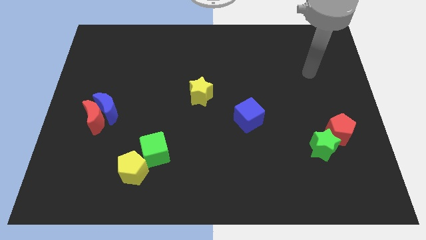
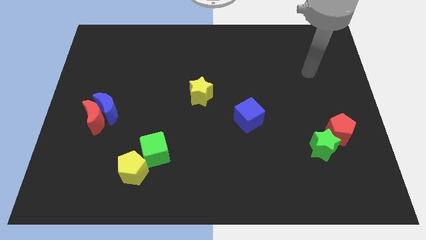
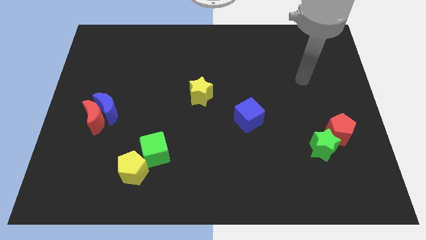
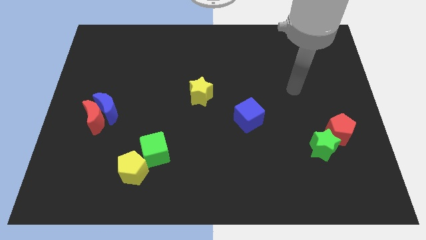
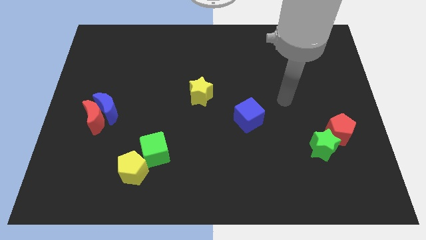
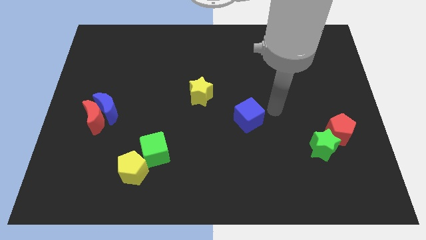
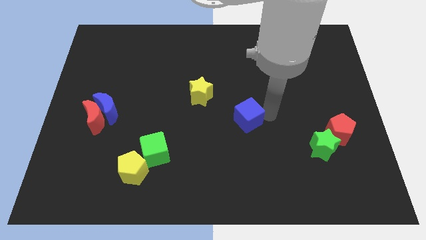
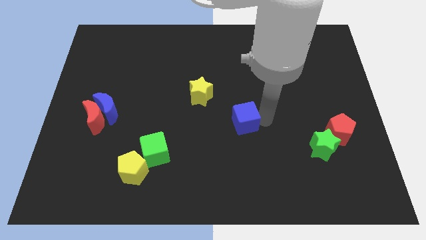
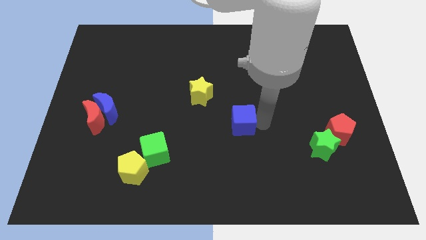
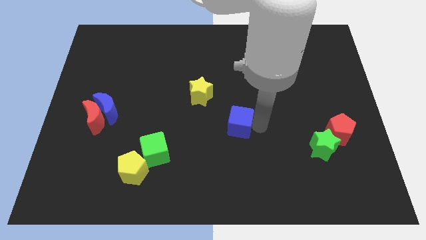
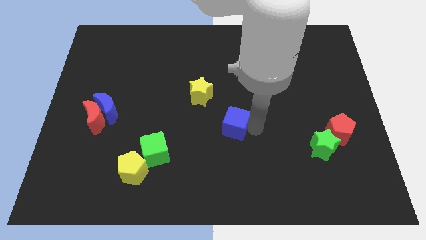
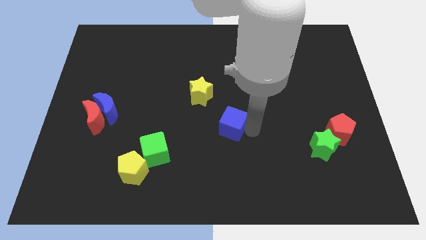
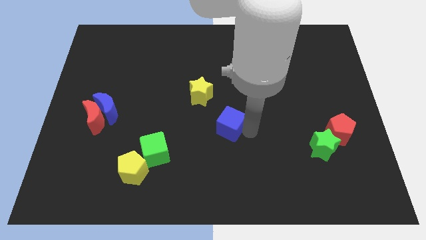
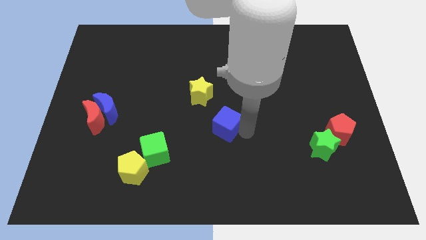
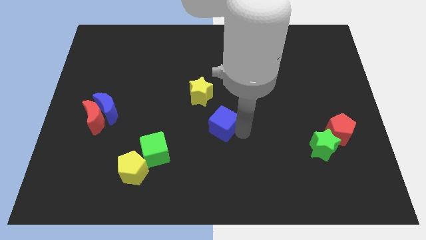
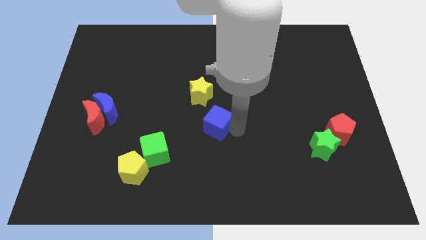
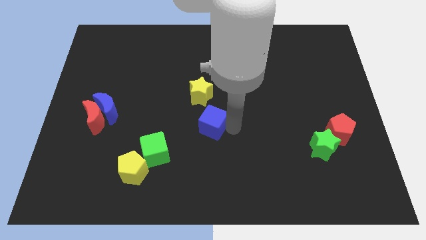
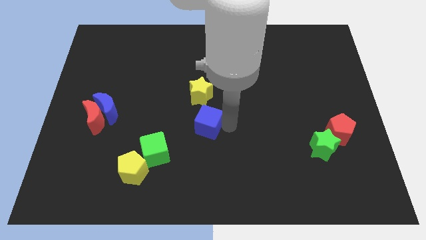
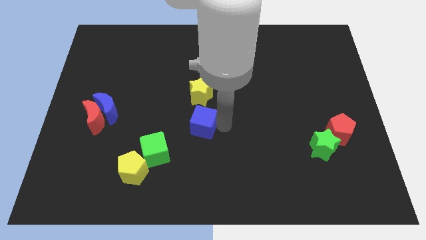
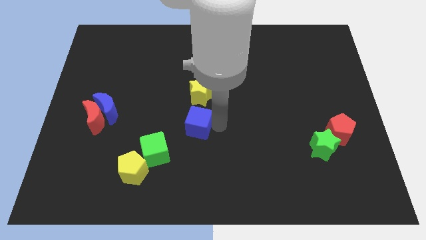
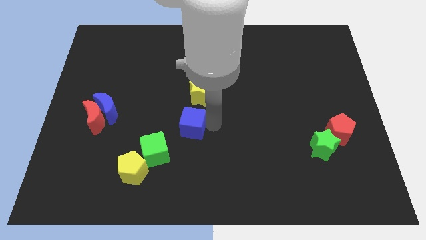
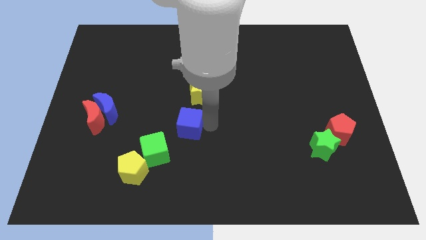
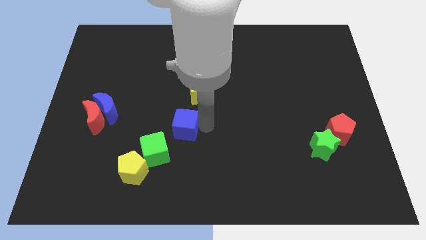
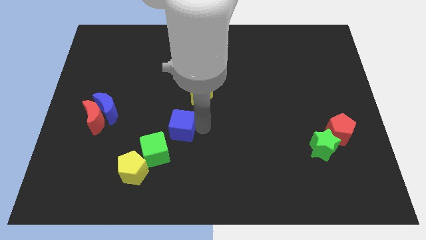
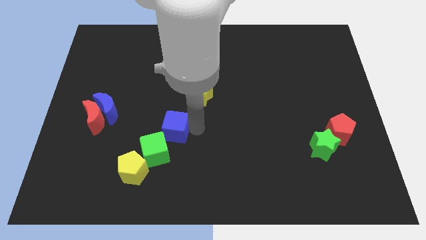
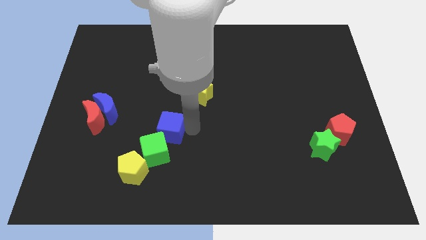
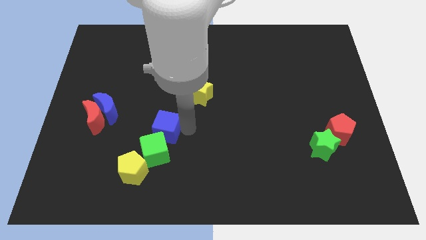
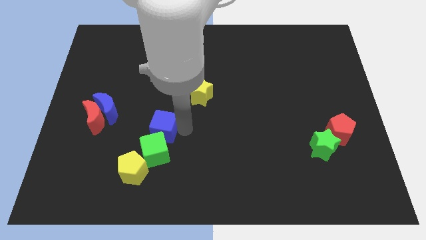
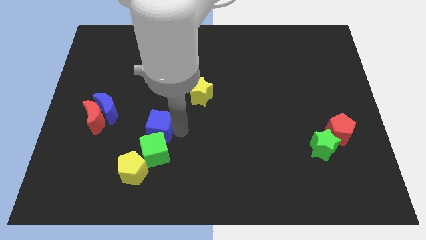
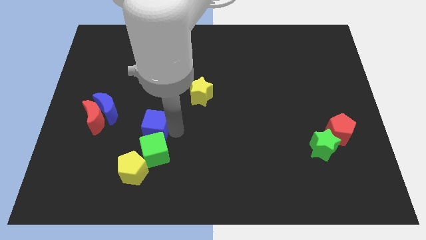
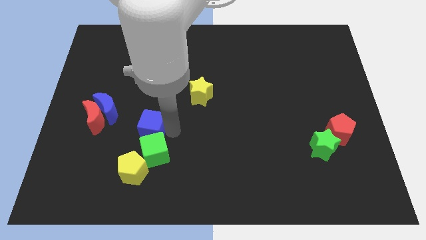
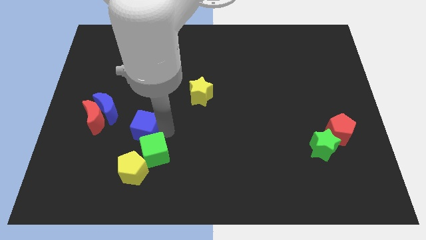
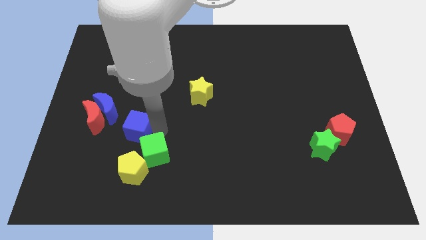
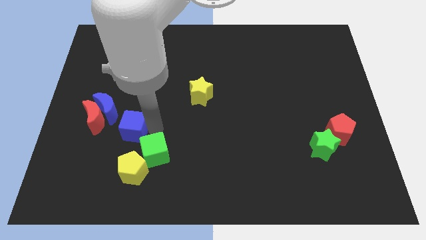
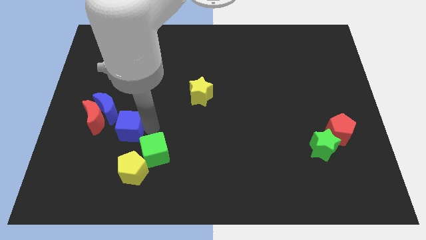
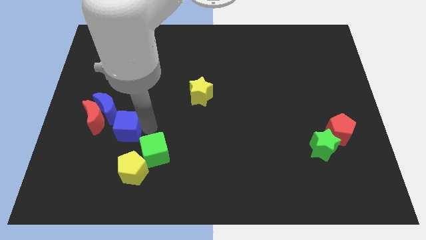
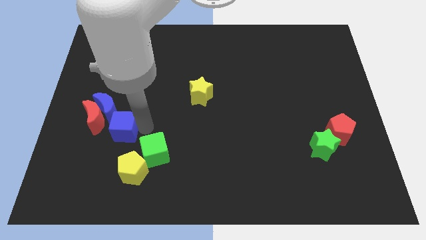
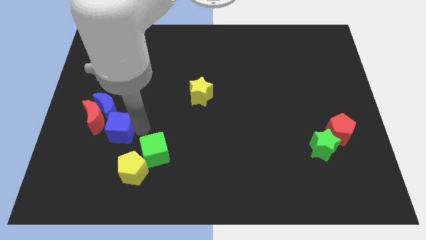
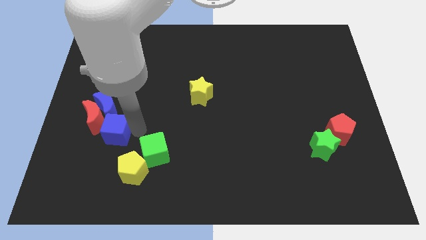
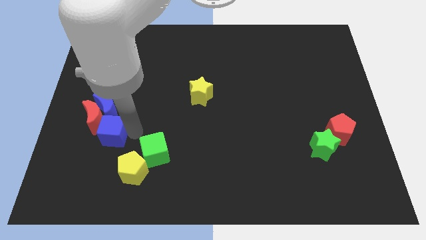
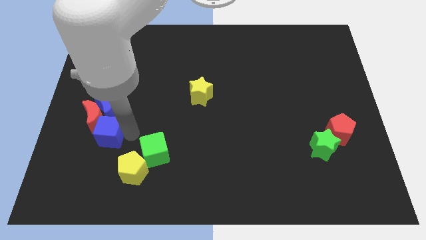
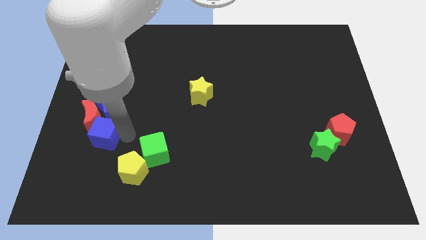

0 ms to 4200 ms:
slide the blue cube close to the red moon

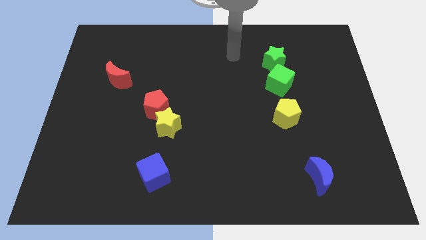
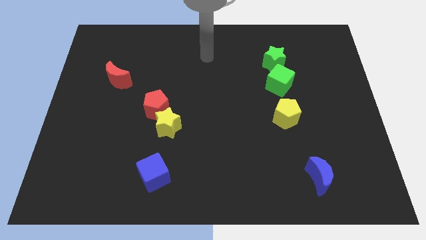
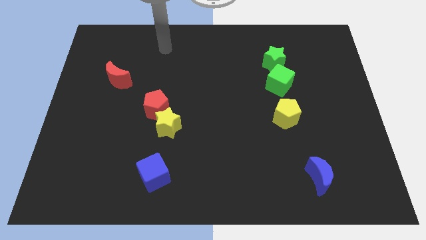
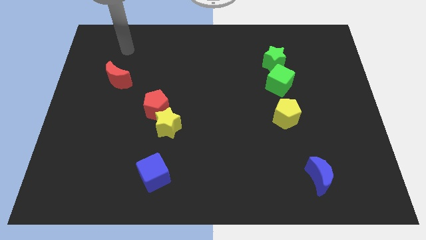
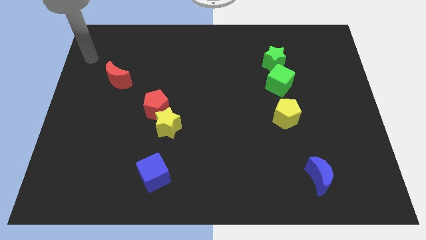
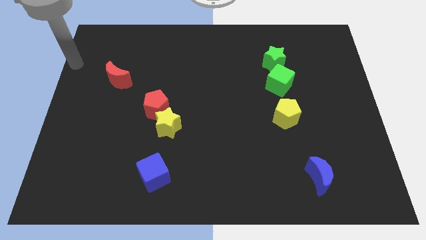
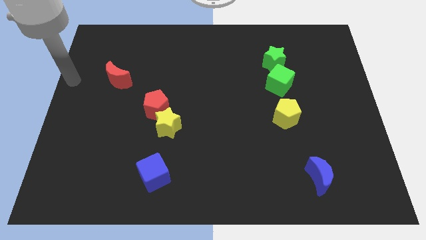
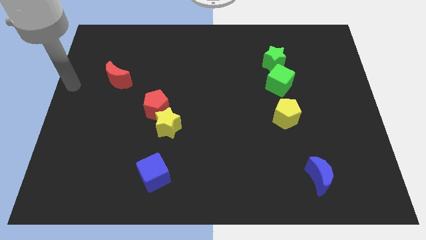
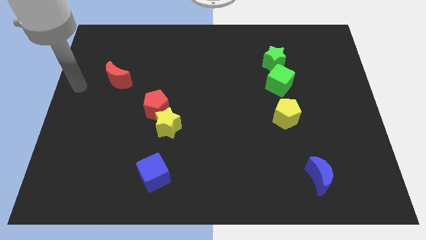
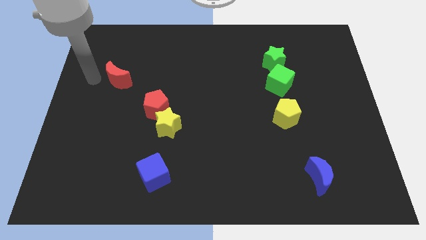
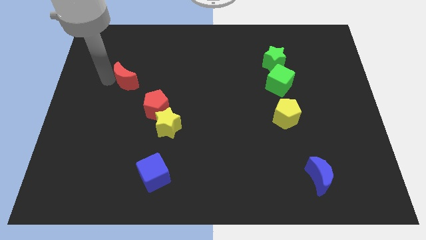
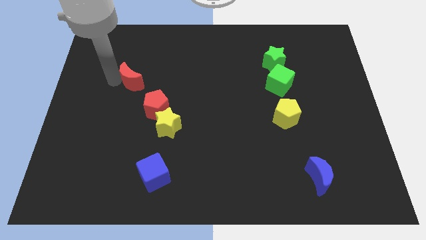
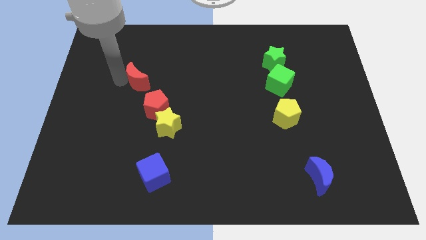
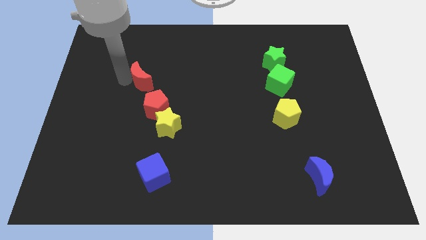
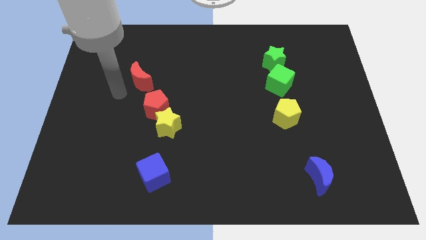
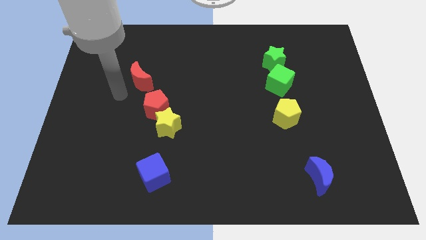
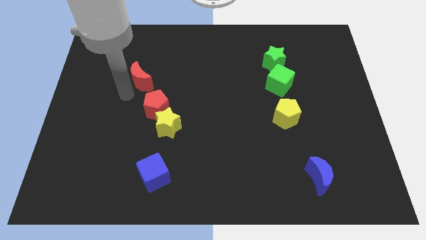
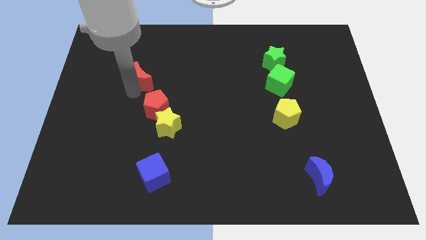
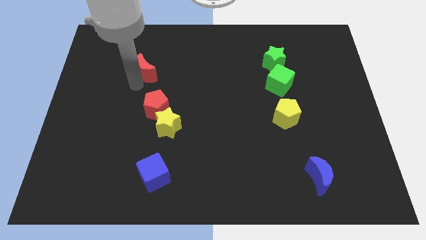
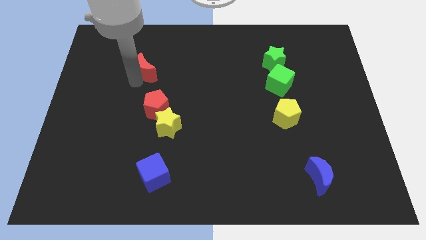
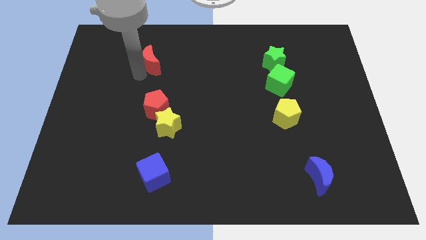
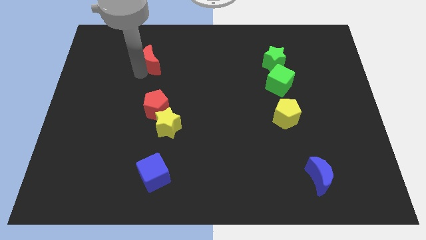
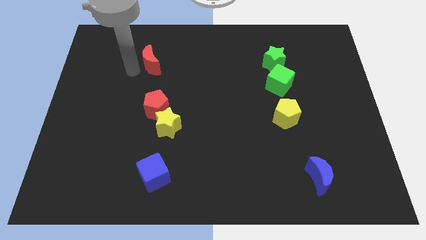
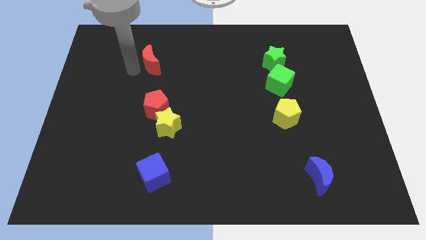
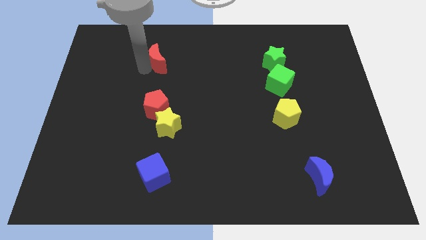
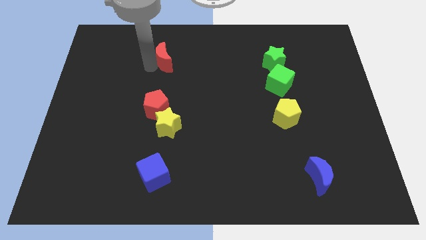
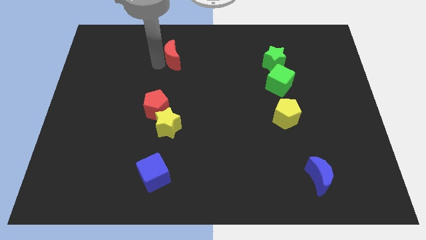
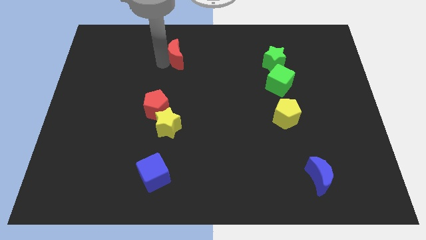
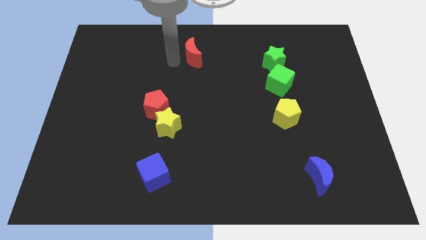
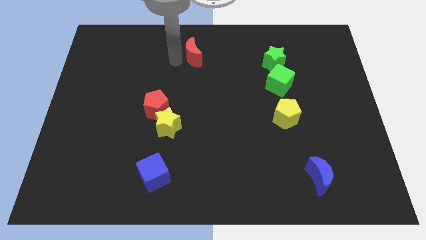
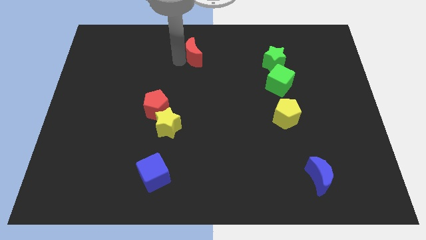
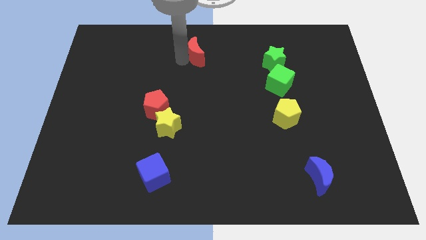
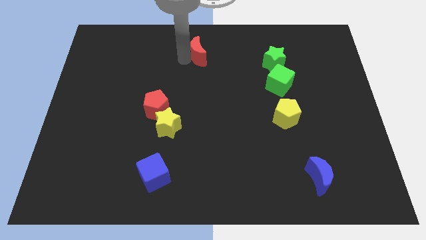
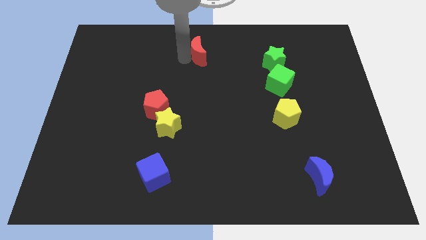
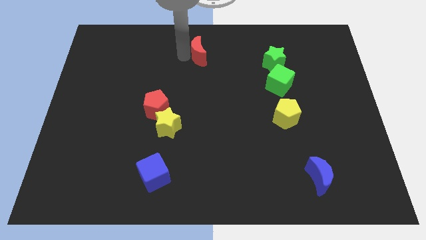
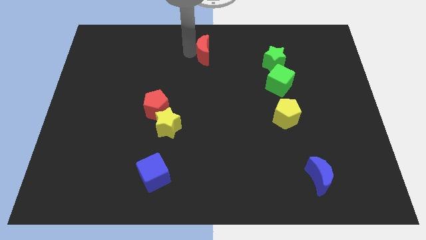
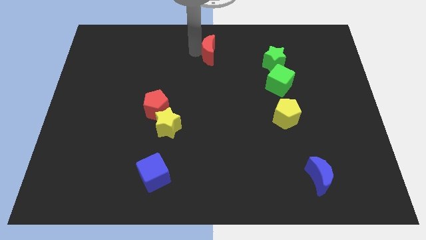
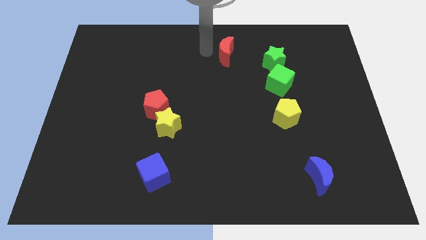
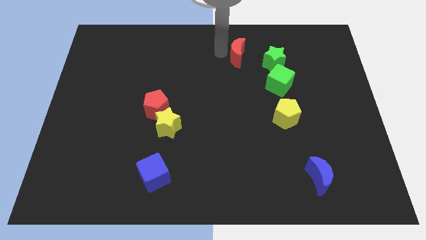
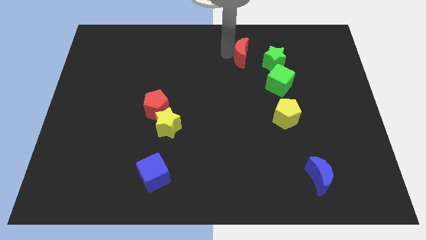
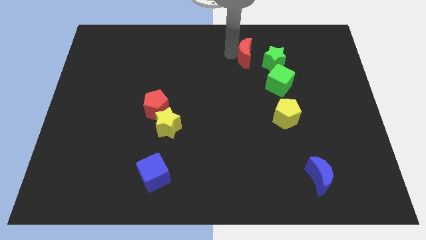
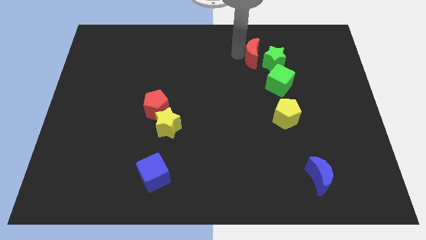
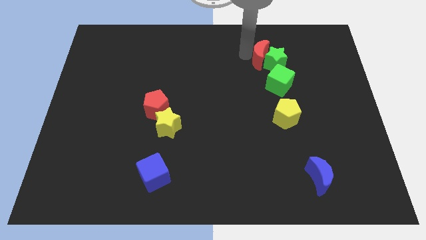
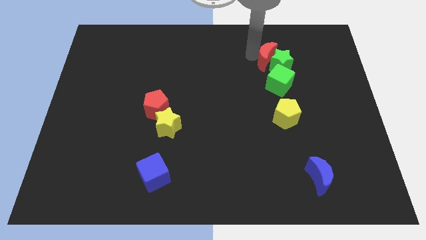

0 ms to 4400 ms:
move the red moon next to the green star
